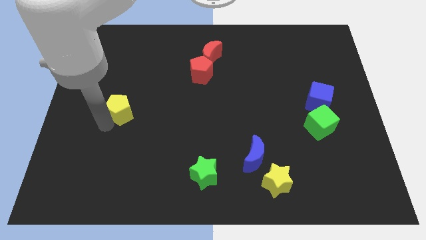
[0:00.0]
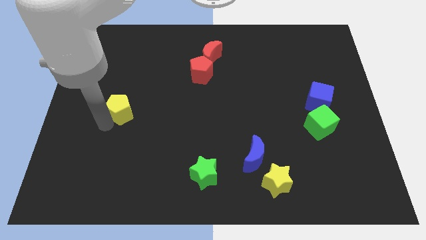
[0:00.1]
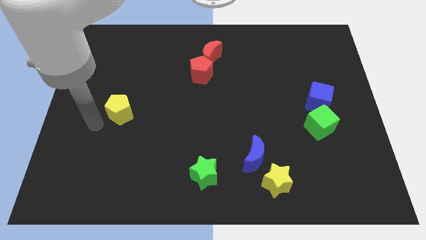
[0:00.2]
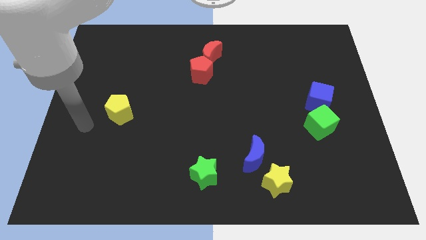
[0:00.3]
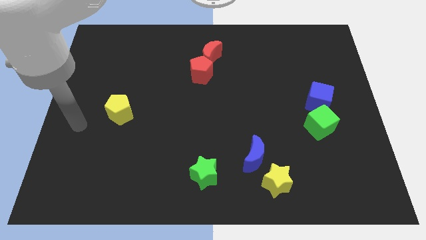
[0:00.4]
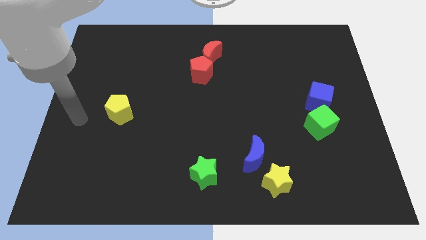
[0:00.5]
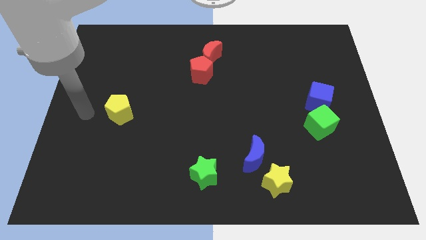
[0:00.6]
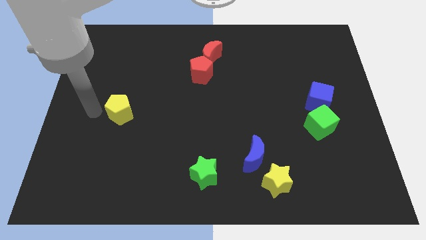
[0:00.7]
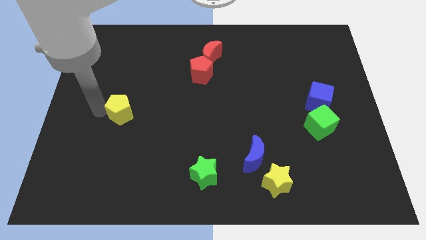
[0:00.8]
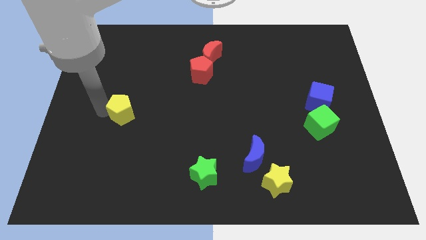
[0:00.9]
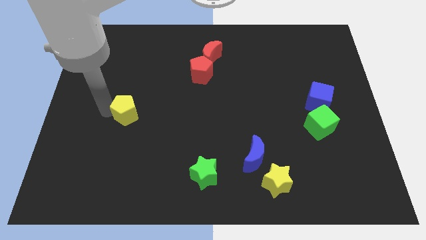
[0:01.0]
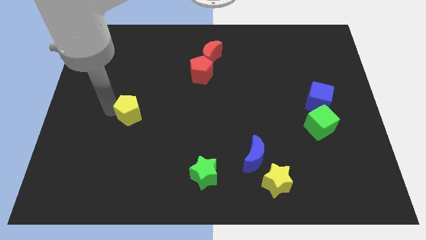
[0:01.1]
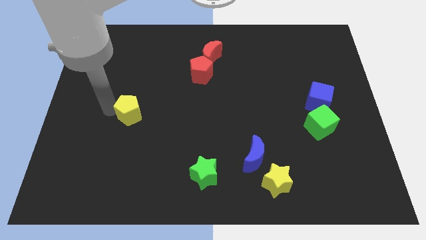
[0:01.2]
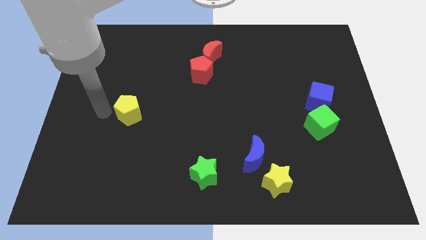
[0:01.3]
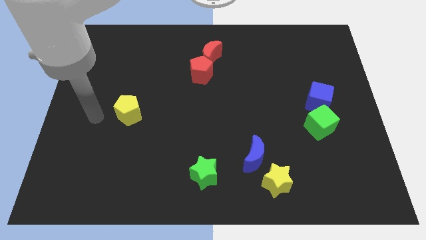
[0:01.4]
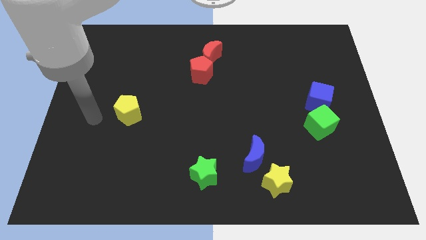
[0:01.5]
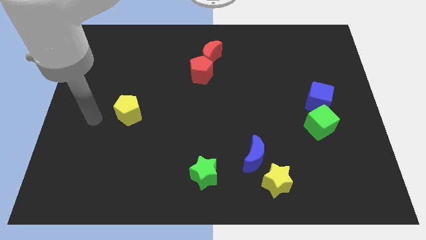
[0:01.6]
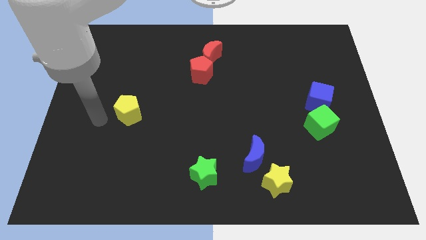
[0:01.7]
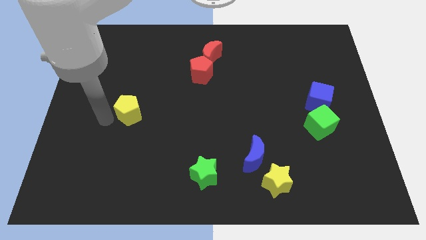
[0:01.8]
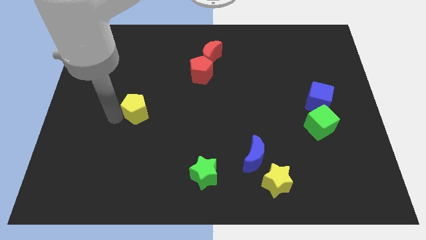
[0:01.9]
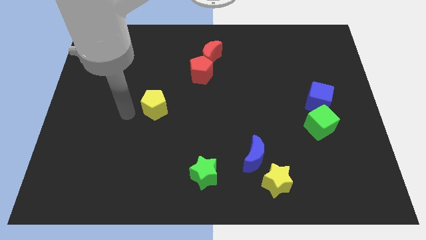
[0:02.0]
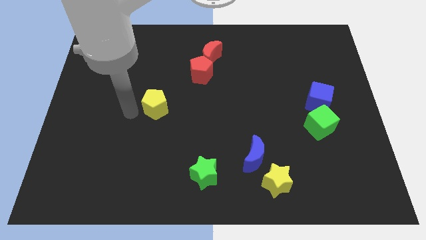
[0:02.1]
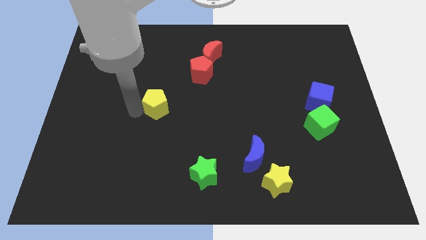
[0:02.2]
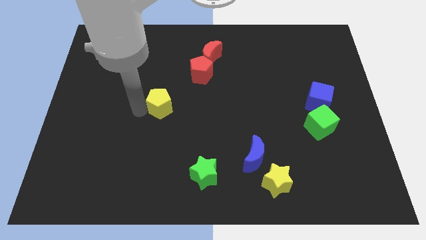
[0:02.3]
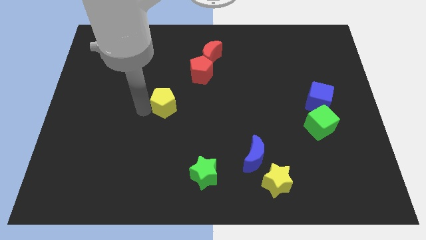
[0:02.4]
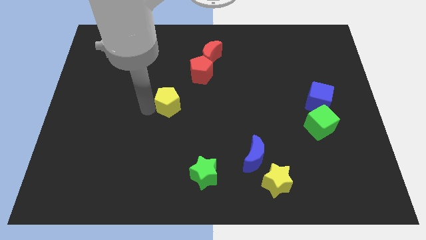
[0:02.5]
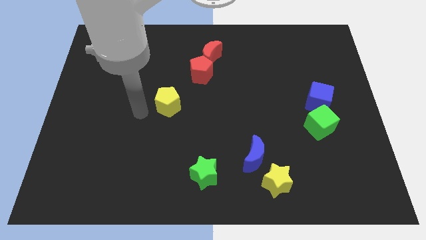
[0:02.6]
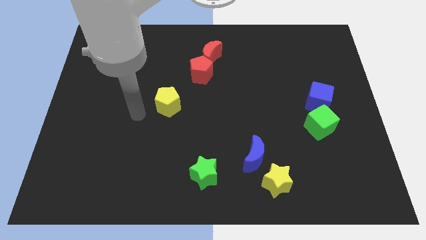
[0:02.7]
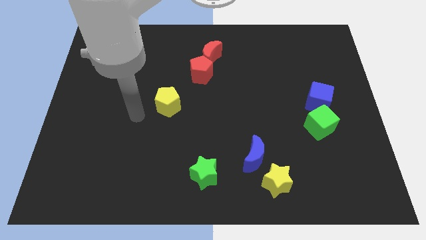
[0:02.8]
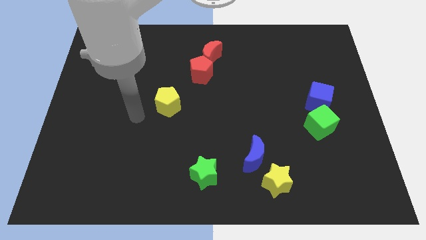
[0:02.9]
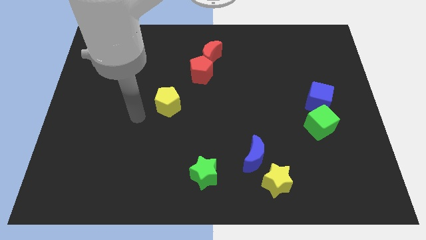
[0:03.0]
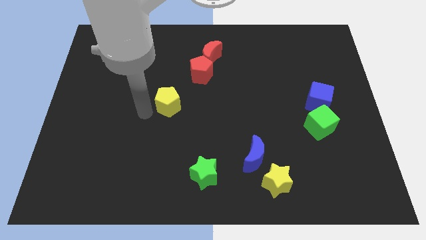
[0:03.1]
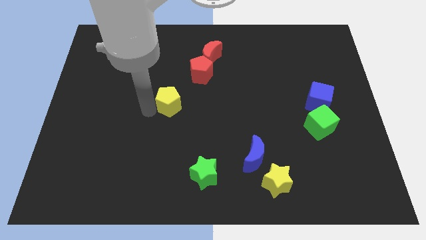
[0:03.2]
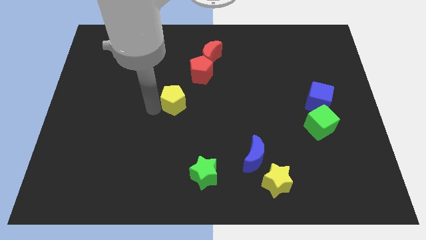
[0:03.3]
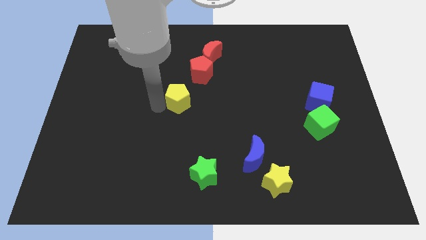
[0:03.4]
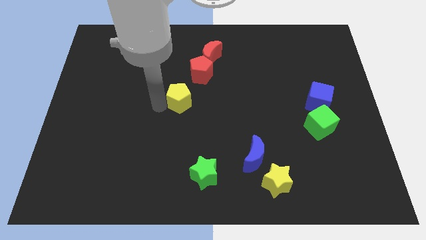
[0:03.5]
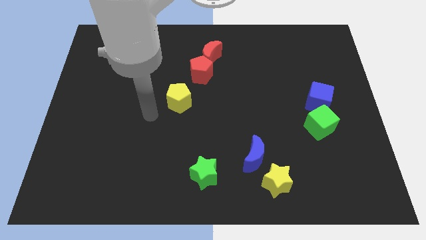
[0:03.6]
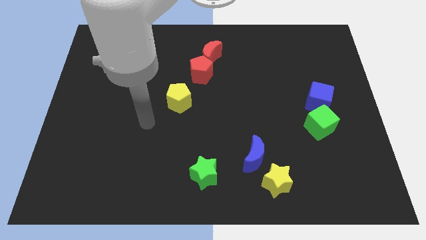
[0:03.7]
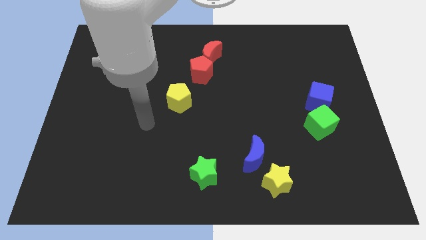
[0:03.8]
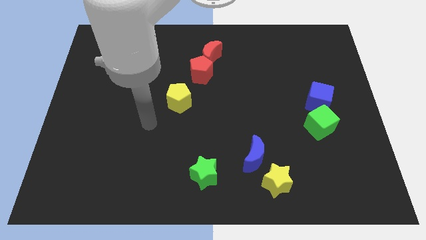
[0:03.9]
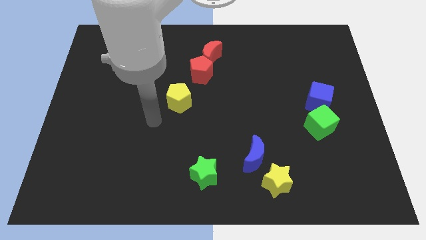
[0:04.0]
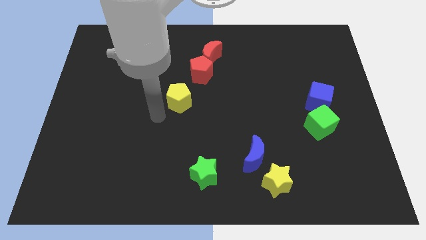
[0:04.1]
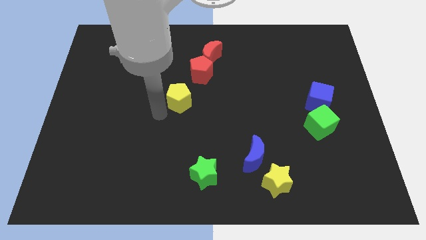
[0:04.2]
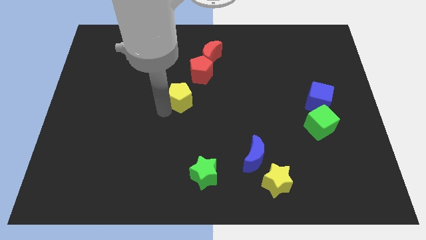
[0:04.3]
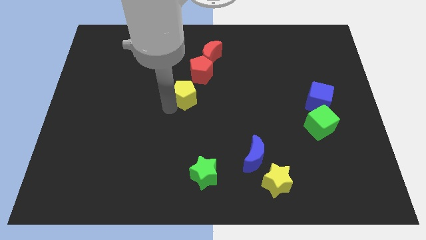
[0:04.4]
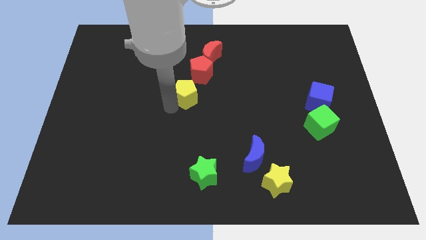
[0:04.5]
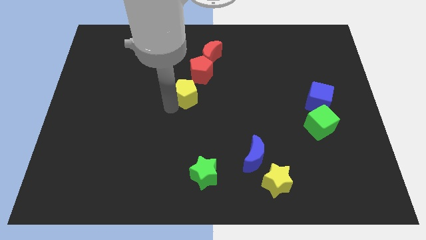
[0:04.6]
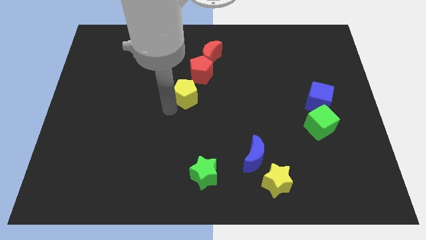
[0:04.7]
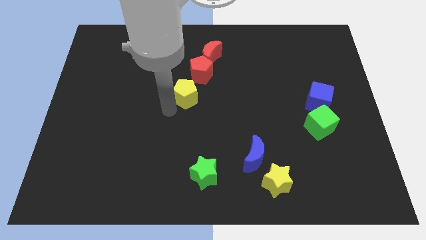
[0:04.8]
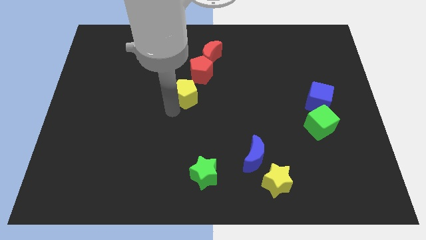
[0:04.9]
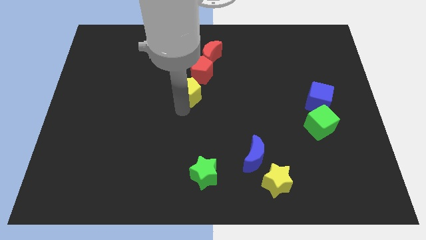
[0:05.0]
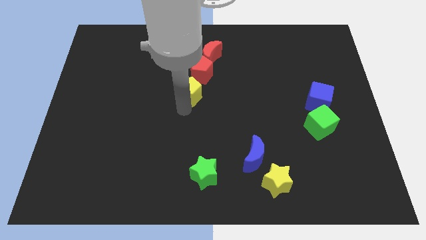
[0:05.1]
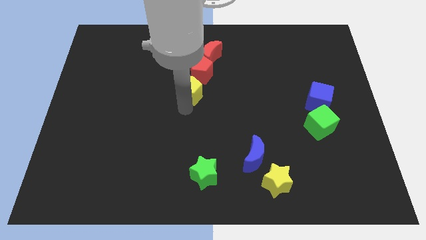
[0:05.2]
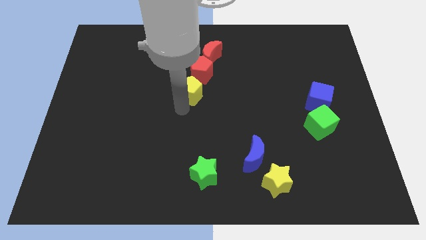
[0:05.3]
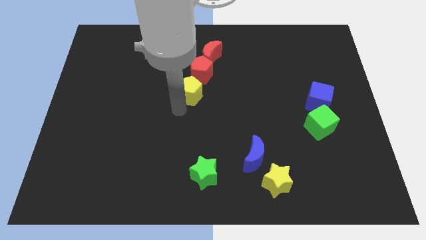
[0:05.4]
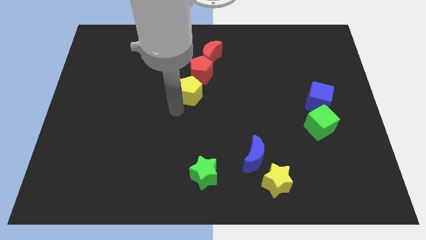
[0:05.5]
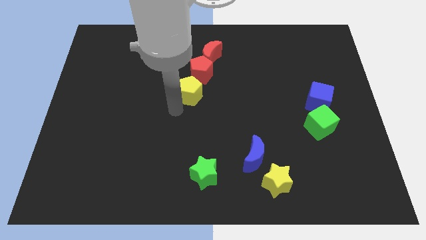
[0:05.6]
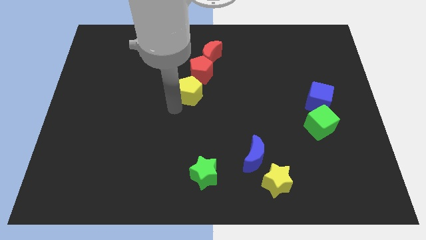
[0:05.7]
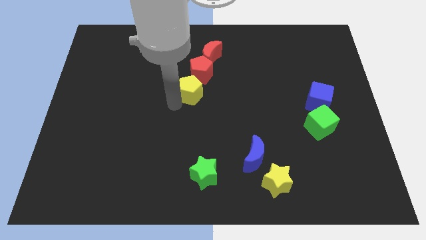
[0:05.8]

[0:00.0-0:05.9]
place the yellow pentagon below the red pentagon

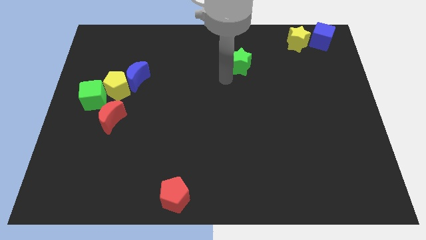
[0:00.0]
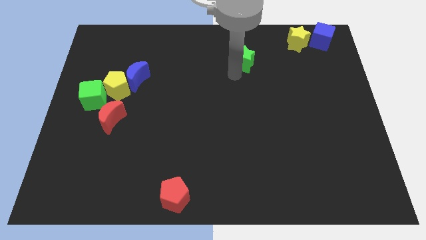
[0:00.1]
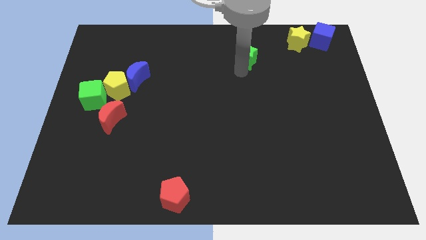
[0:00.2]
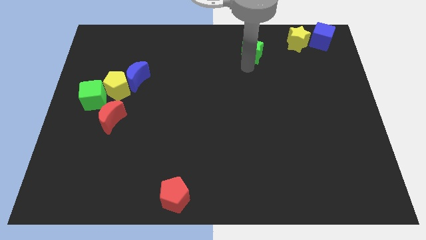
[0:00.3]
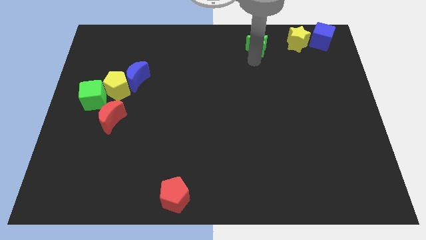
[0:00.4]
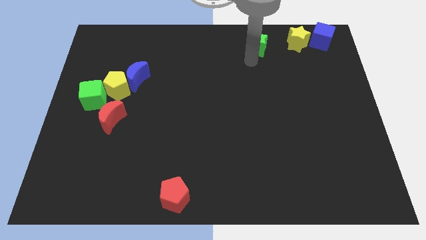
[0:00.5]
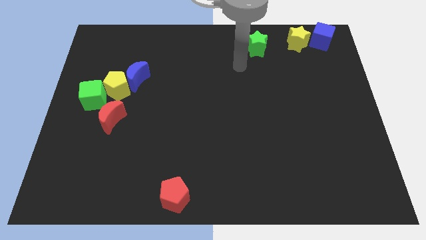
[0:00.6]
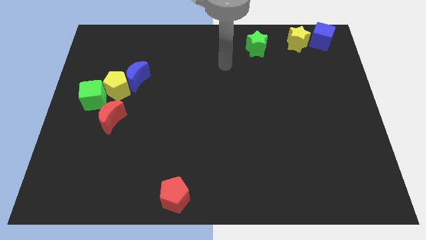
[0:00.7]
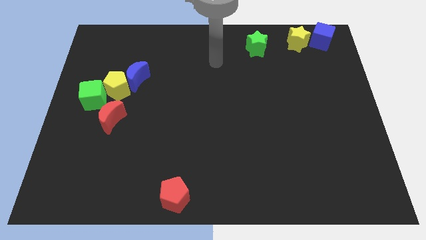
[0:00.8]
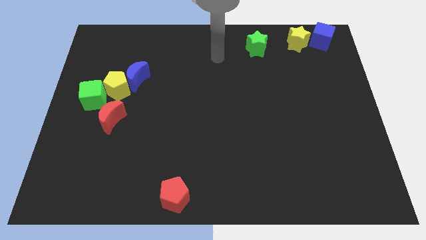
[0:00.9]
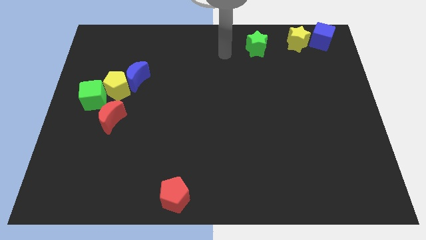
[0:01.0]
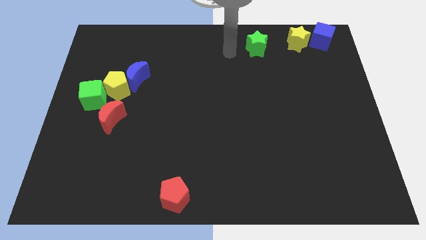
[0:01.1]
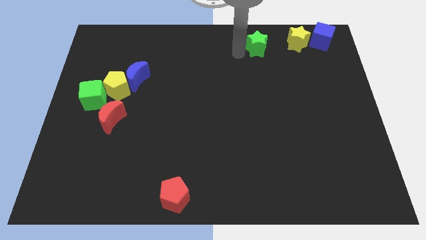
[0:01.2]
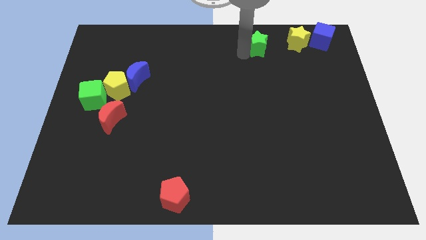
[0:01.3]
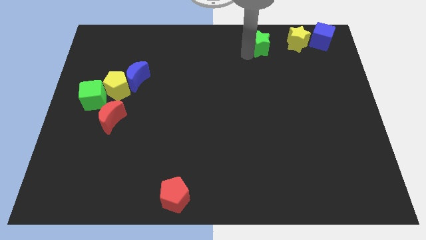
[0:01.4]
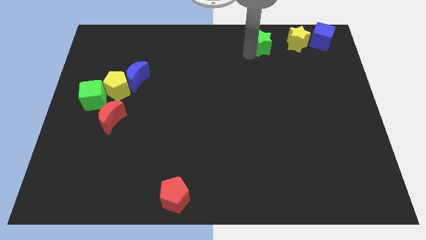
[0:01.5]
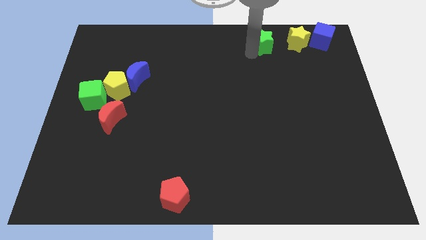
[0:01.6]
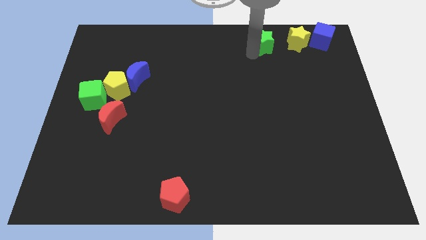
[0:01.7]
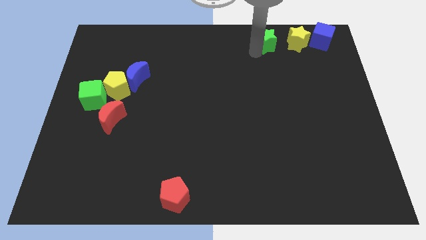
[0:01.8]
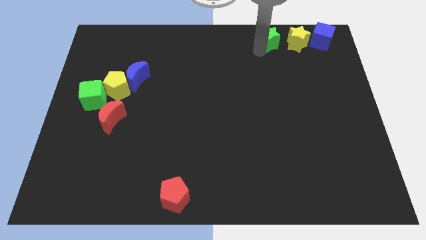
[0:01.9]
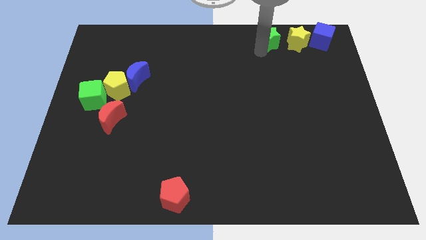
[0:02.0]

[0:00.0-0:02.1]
place green star beside yellow star

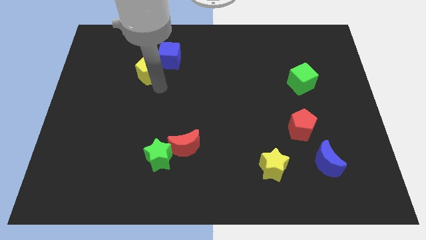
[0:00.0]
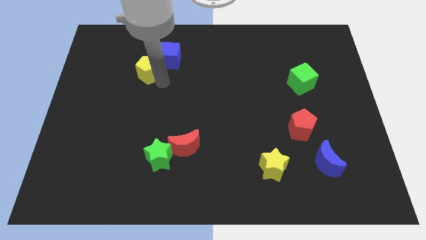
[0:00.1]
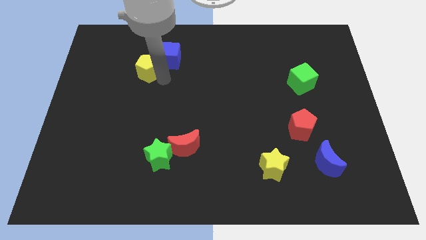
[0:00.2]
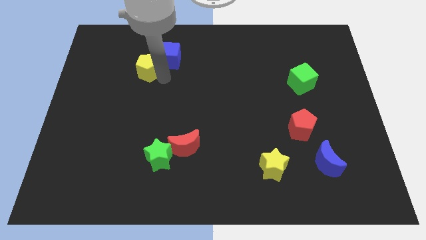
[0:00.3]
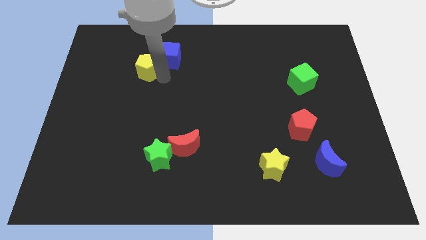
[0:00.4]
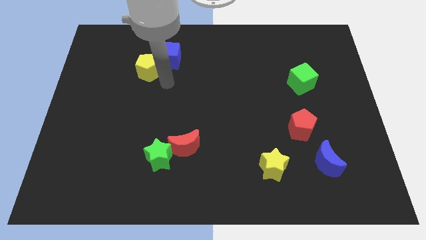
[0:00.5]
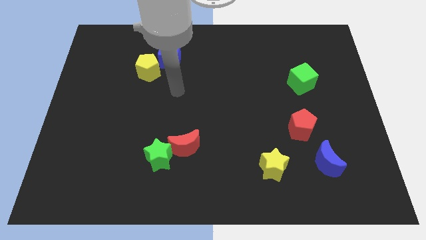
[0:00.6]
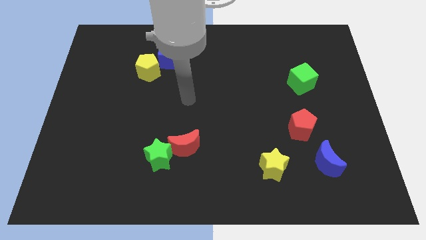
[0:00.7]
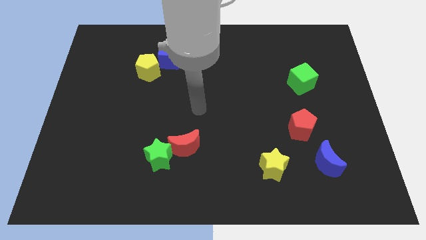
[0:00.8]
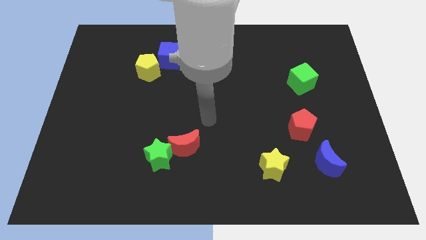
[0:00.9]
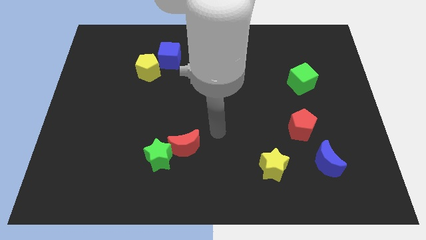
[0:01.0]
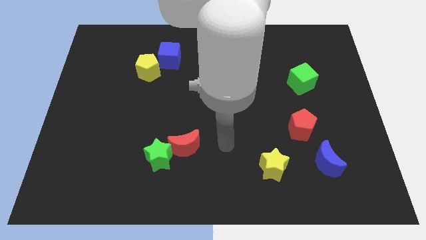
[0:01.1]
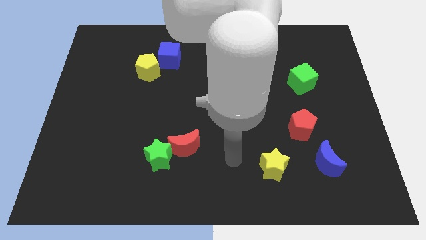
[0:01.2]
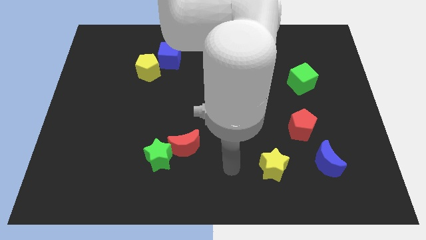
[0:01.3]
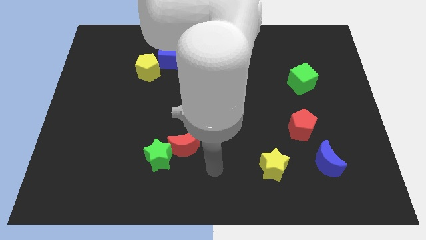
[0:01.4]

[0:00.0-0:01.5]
move yourself away from the yellow pentagon
